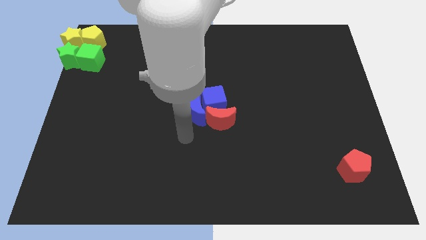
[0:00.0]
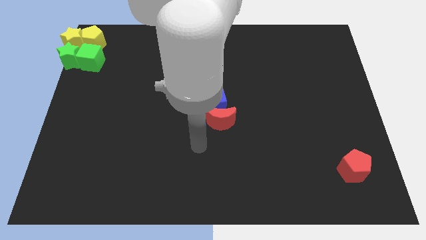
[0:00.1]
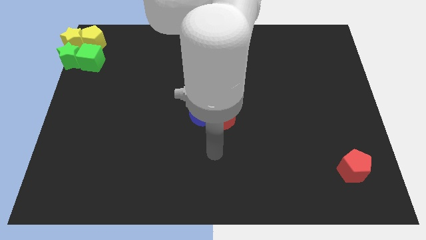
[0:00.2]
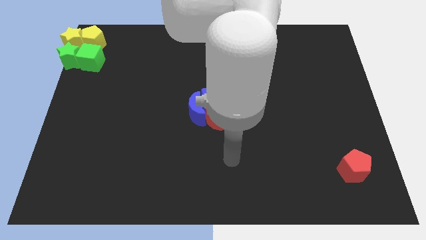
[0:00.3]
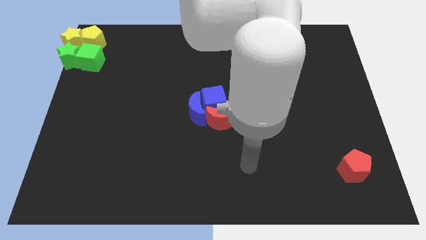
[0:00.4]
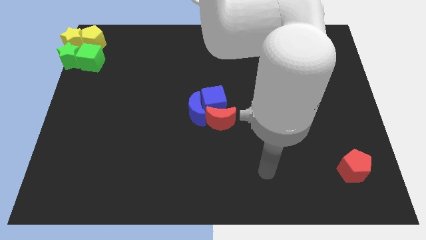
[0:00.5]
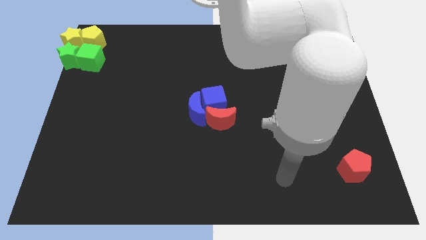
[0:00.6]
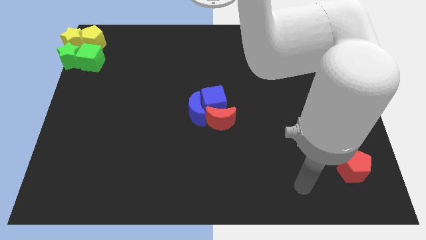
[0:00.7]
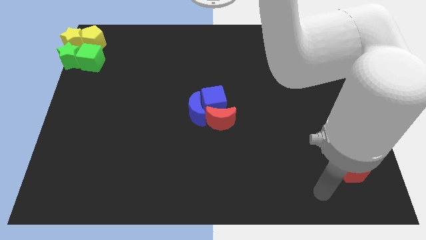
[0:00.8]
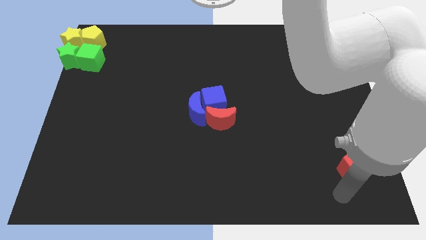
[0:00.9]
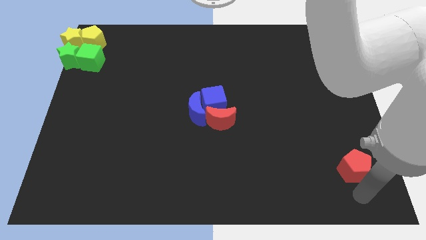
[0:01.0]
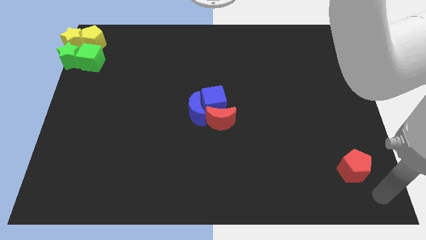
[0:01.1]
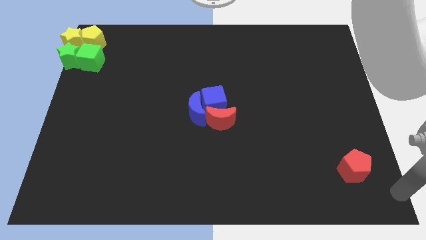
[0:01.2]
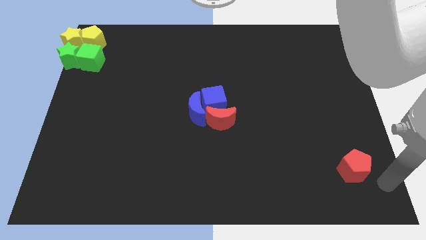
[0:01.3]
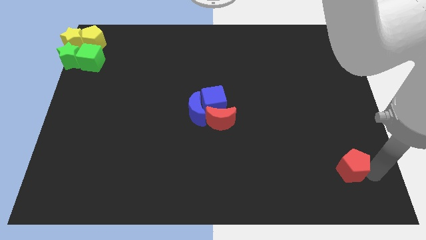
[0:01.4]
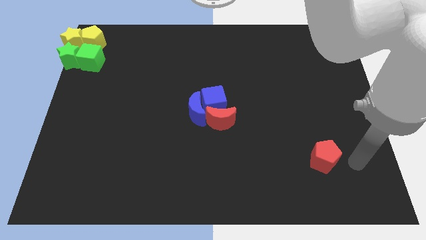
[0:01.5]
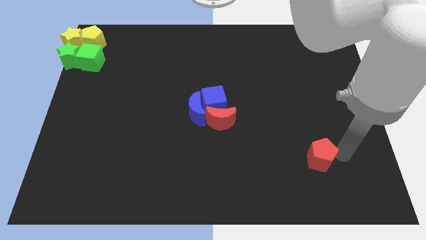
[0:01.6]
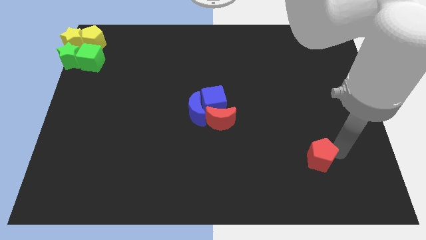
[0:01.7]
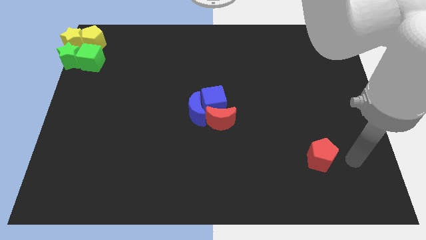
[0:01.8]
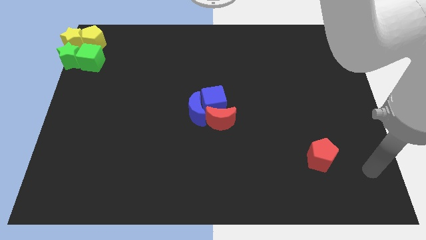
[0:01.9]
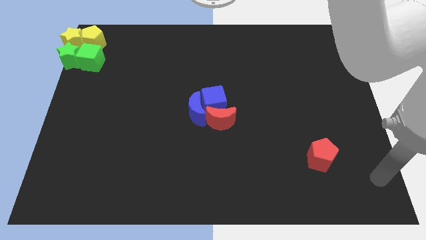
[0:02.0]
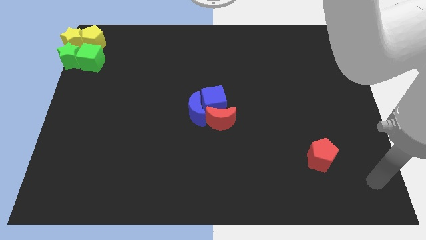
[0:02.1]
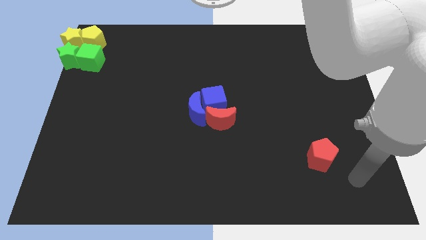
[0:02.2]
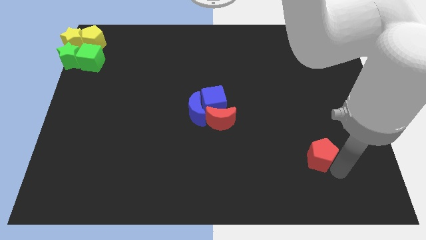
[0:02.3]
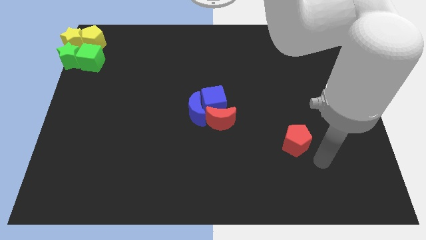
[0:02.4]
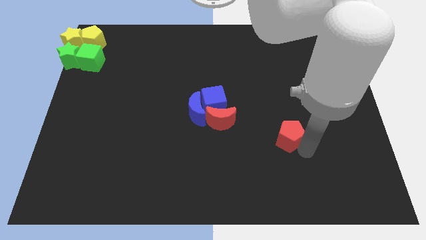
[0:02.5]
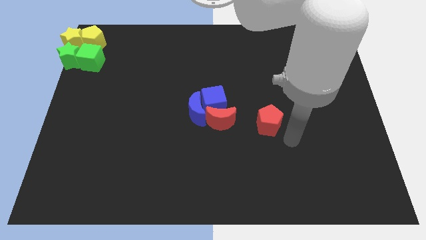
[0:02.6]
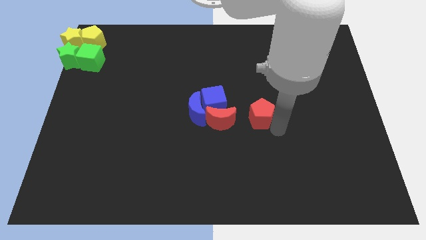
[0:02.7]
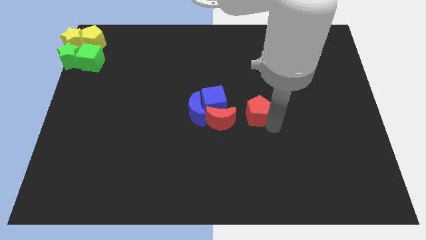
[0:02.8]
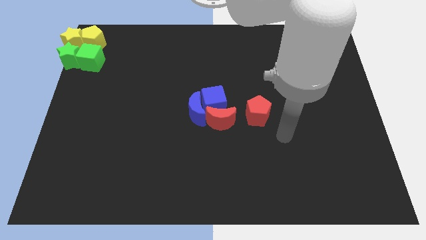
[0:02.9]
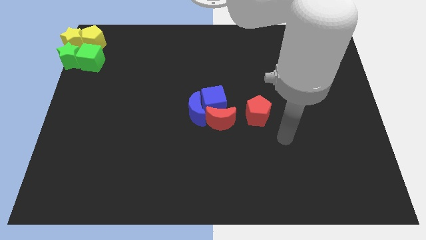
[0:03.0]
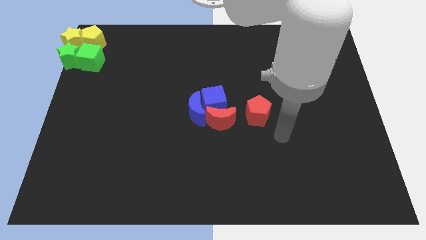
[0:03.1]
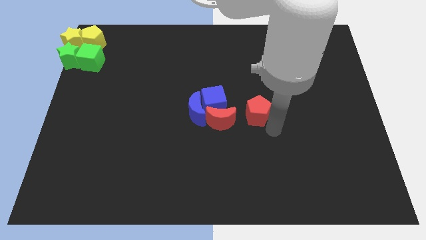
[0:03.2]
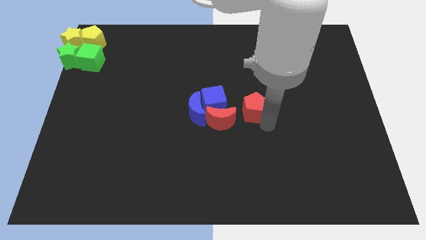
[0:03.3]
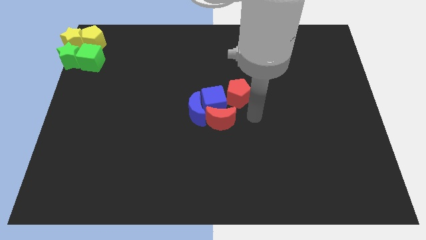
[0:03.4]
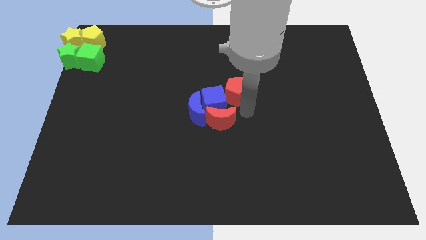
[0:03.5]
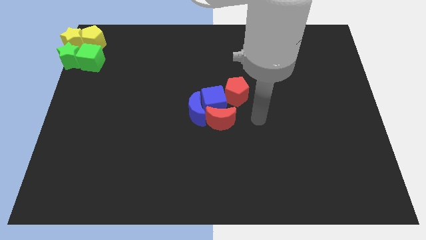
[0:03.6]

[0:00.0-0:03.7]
slide the red pentagon diagonally top right to the red moon

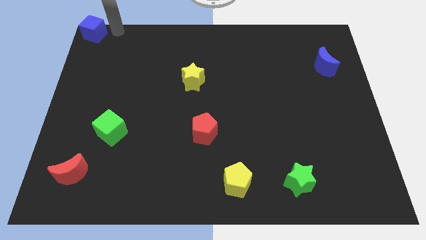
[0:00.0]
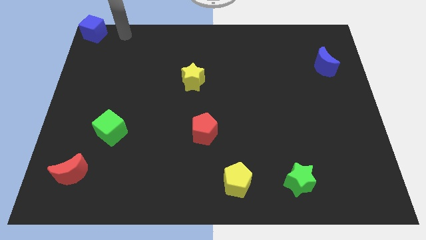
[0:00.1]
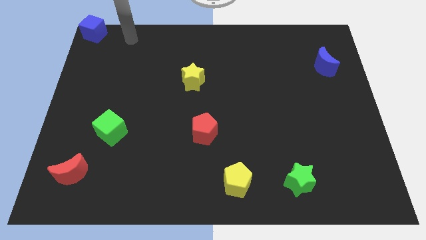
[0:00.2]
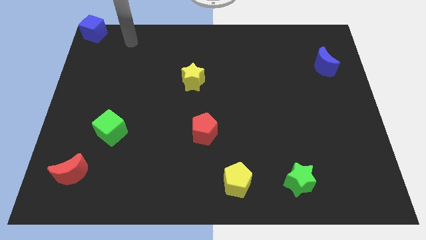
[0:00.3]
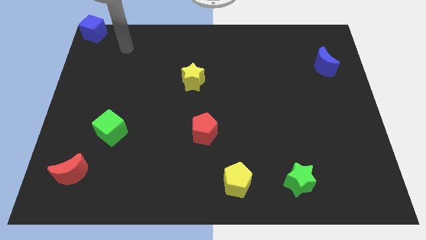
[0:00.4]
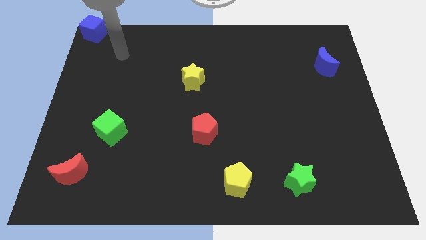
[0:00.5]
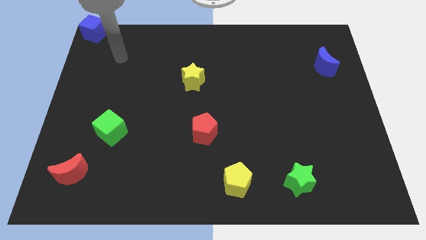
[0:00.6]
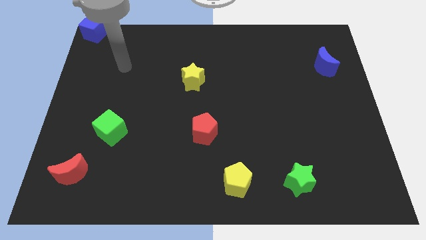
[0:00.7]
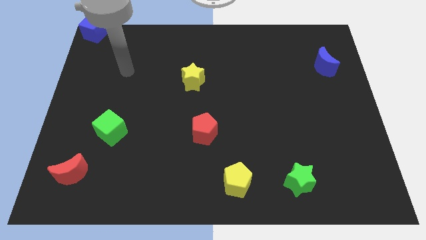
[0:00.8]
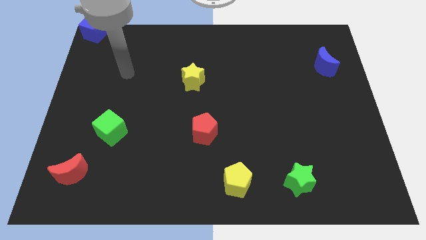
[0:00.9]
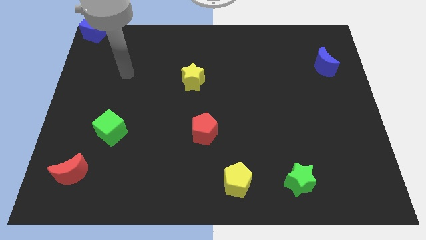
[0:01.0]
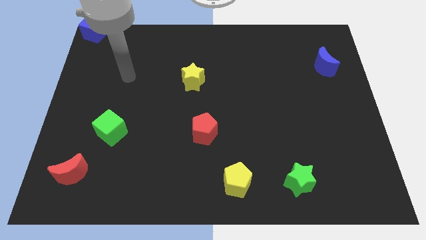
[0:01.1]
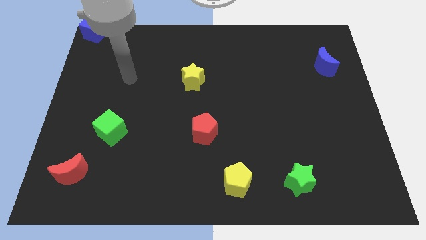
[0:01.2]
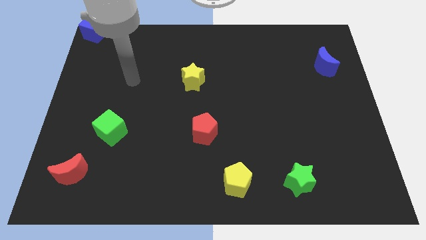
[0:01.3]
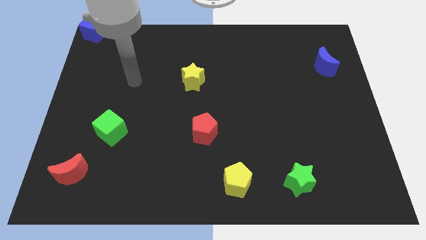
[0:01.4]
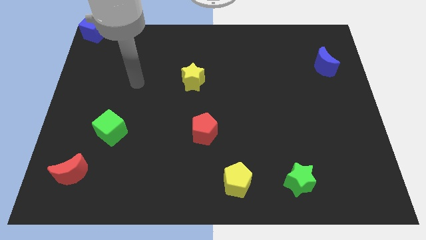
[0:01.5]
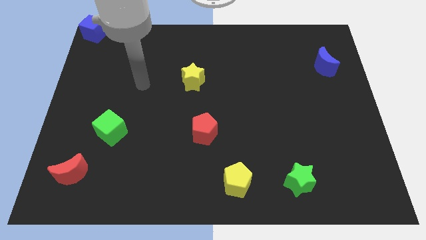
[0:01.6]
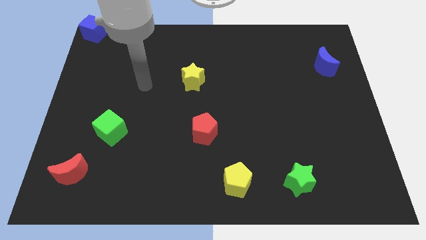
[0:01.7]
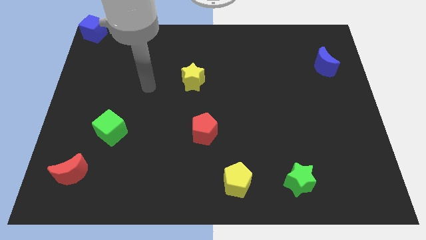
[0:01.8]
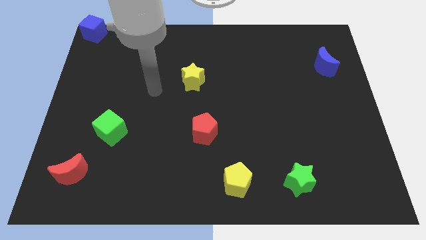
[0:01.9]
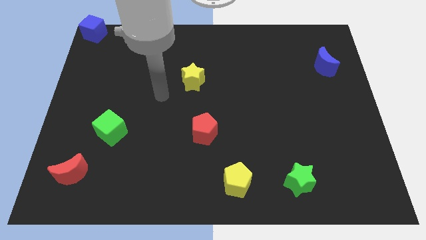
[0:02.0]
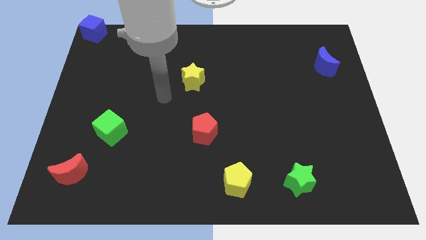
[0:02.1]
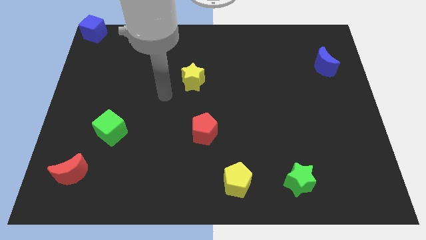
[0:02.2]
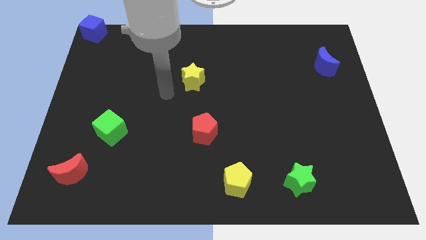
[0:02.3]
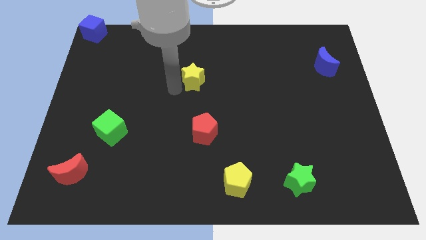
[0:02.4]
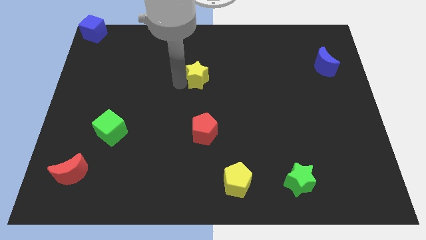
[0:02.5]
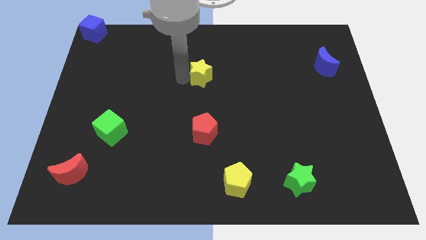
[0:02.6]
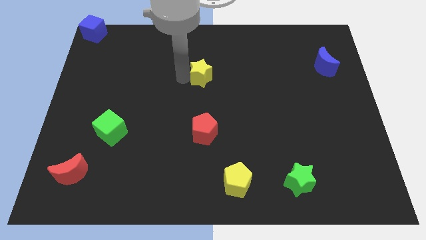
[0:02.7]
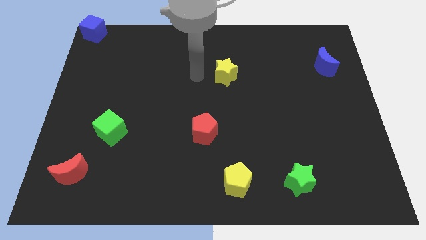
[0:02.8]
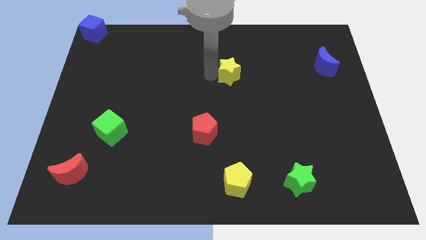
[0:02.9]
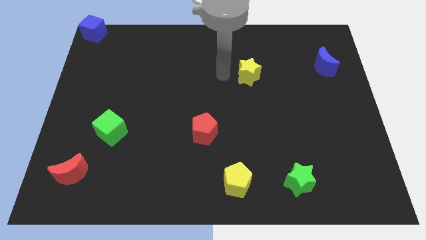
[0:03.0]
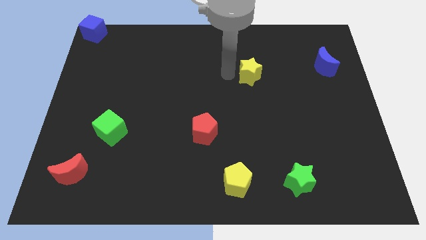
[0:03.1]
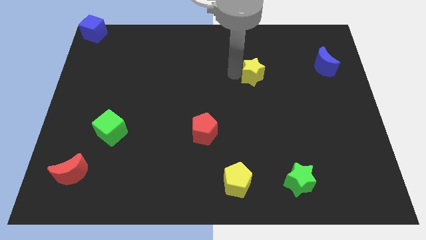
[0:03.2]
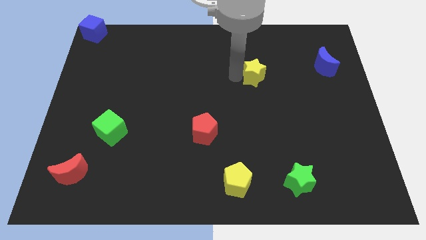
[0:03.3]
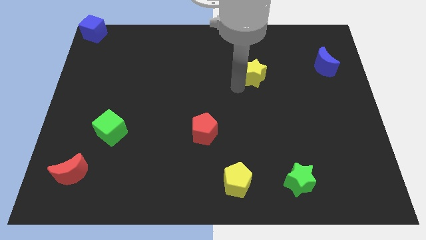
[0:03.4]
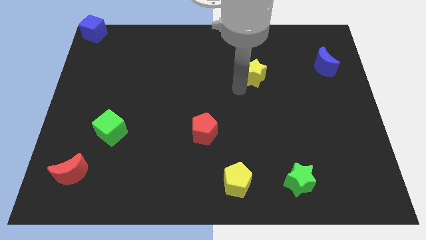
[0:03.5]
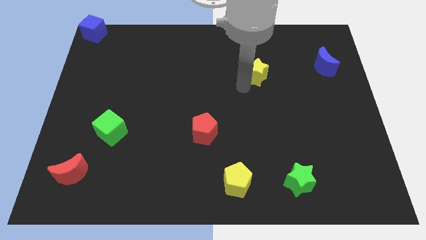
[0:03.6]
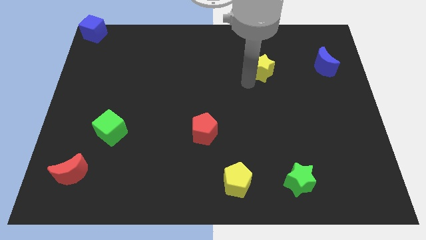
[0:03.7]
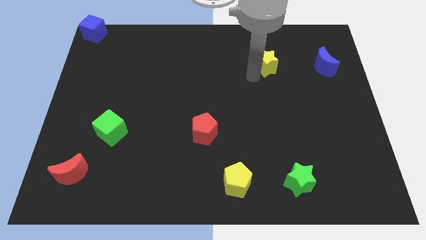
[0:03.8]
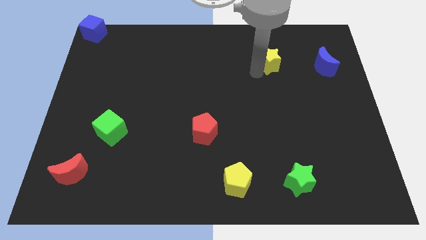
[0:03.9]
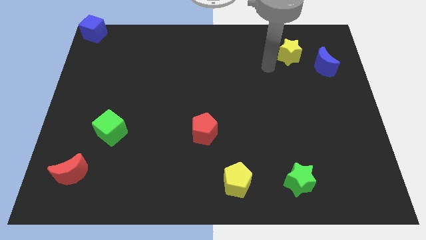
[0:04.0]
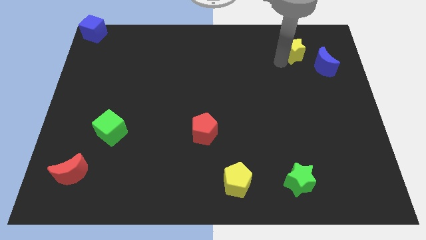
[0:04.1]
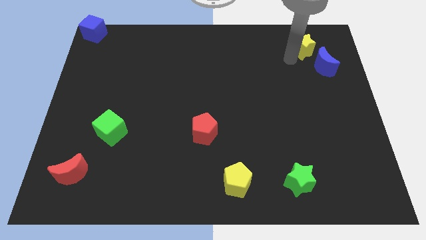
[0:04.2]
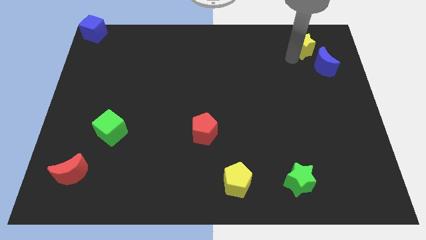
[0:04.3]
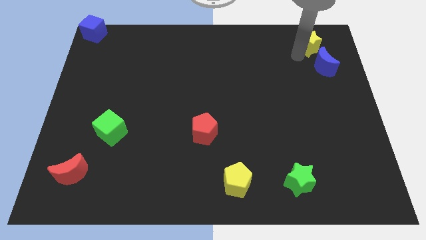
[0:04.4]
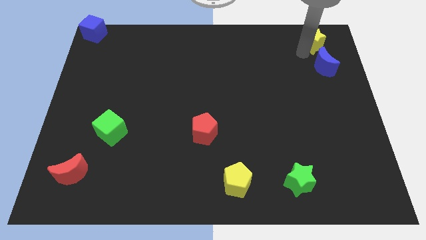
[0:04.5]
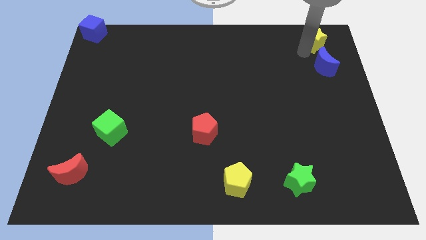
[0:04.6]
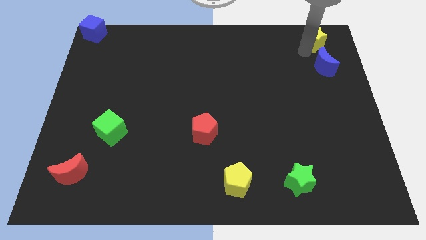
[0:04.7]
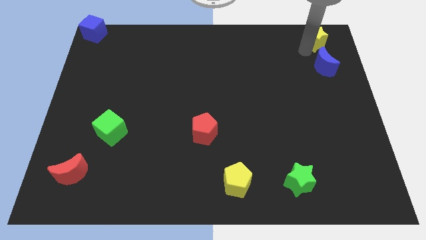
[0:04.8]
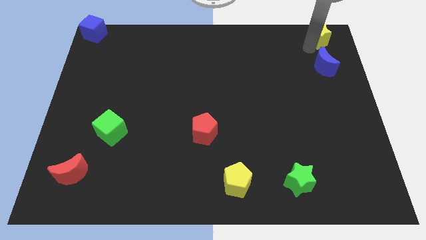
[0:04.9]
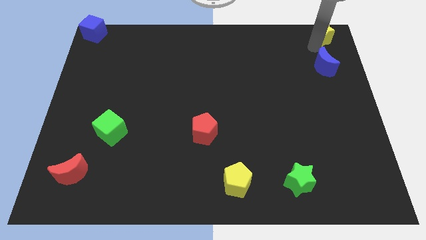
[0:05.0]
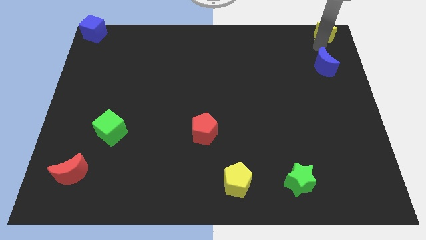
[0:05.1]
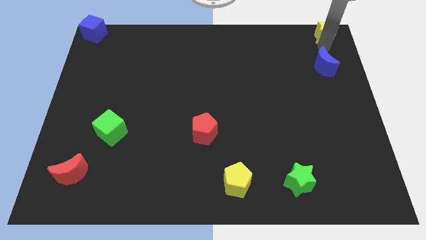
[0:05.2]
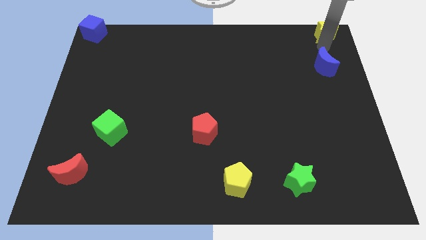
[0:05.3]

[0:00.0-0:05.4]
push the yellow star to the top right
